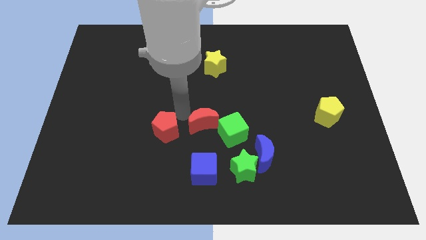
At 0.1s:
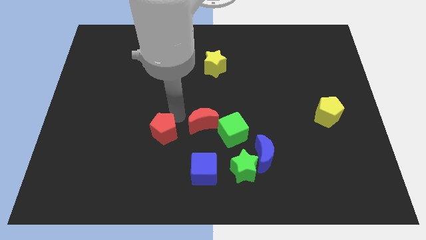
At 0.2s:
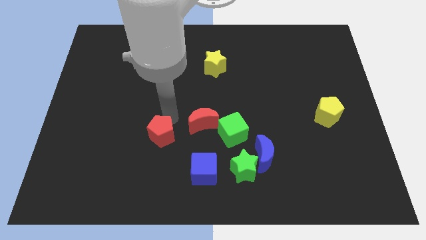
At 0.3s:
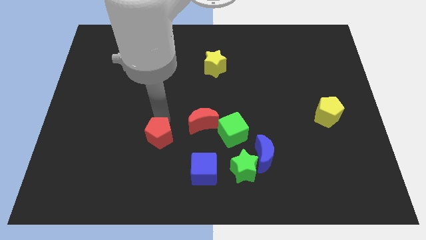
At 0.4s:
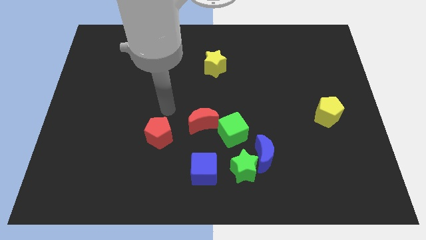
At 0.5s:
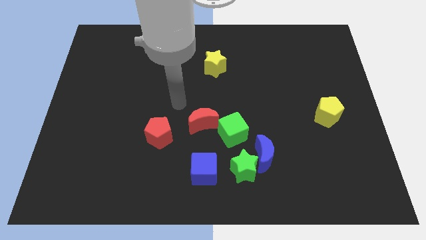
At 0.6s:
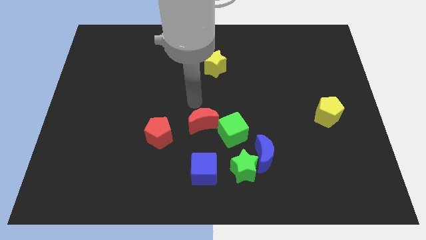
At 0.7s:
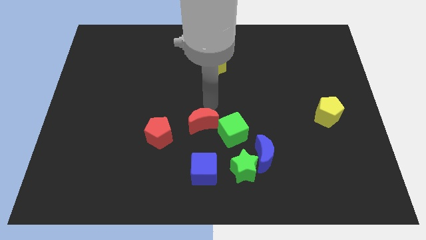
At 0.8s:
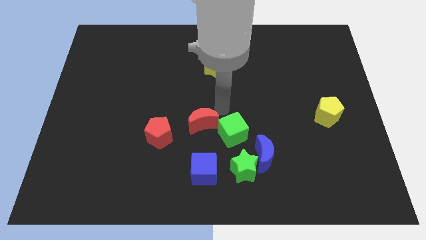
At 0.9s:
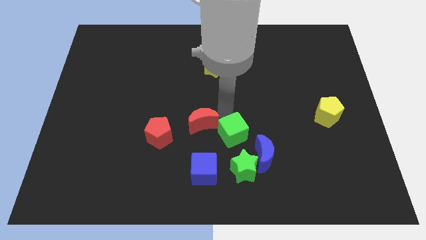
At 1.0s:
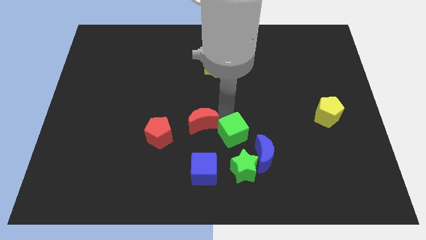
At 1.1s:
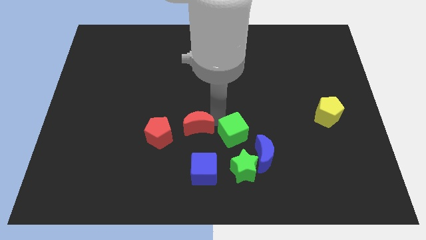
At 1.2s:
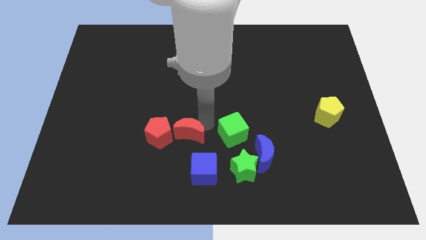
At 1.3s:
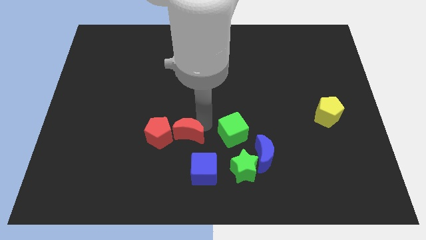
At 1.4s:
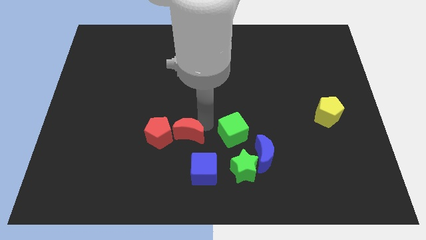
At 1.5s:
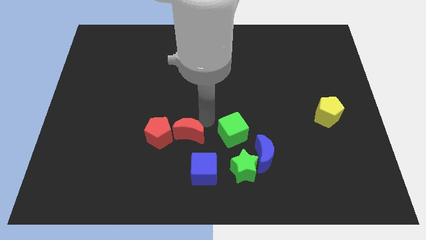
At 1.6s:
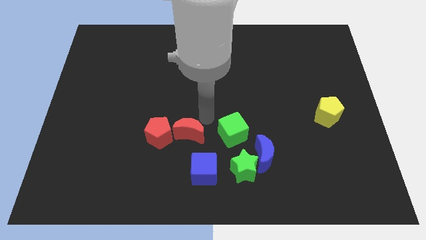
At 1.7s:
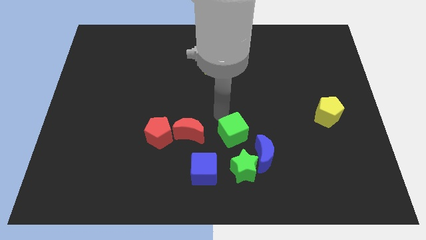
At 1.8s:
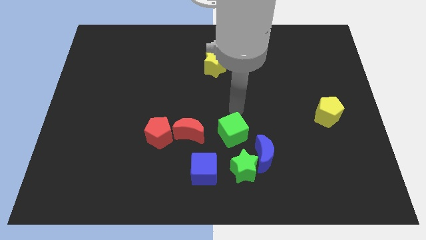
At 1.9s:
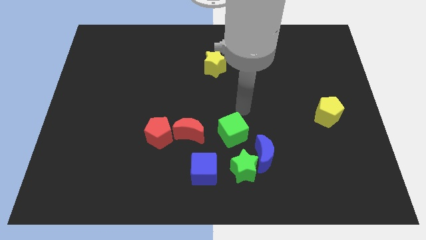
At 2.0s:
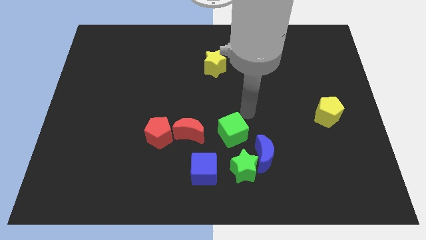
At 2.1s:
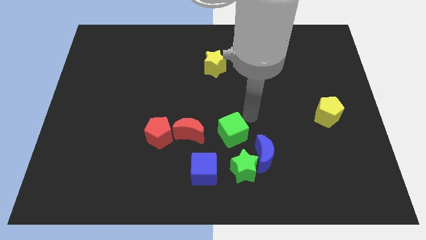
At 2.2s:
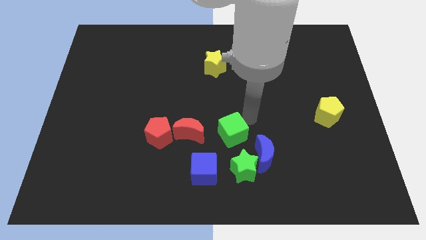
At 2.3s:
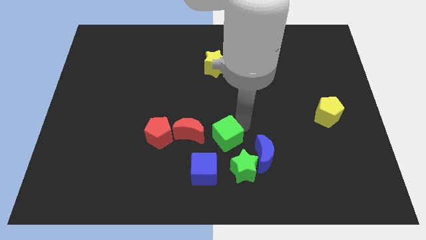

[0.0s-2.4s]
push the red pentagon and red crescent to the left of the green cube

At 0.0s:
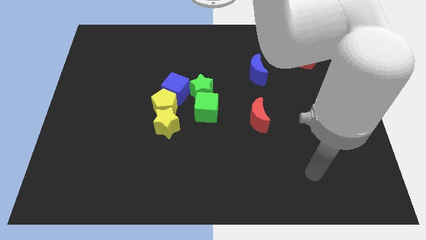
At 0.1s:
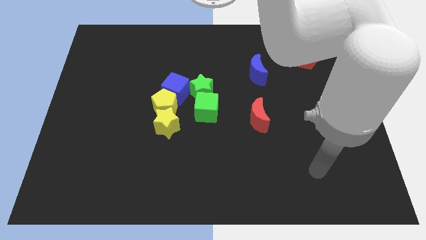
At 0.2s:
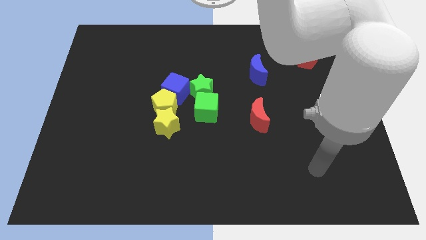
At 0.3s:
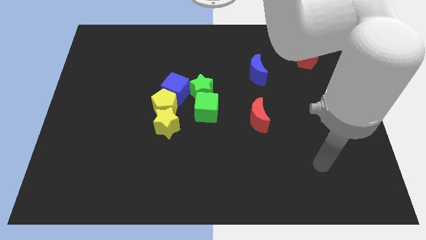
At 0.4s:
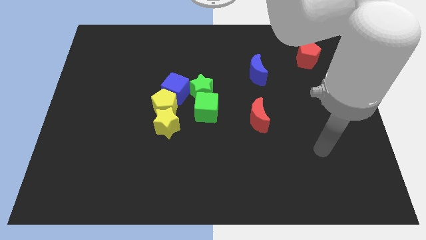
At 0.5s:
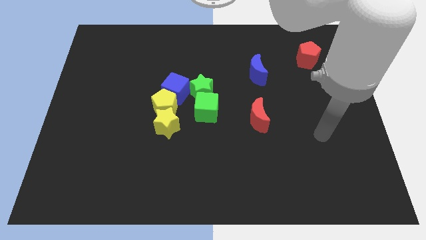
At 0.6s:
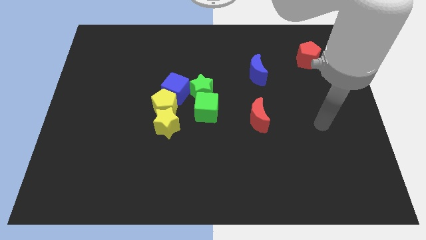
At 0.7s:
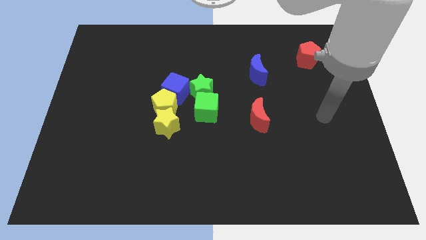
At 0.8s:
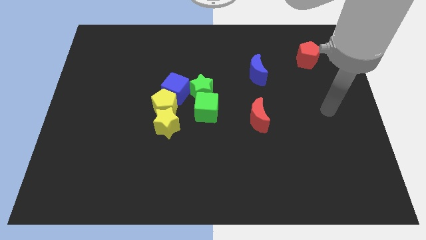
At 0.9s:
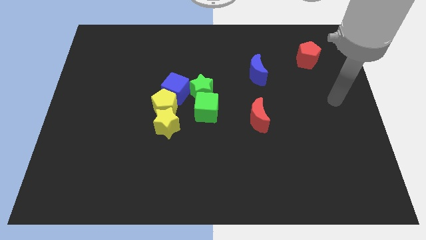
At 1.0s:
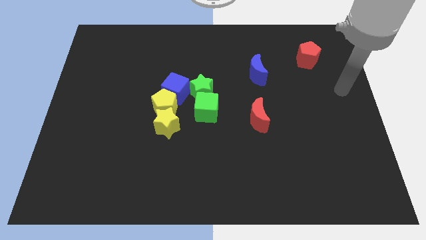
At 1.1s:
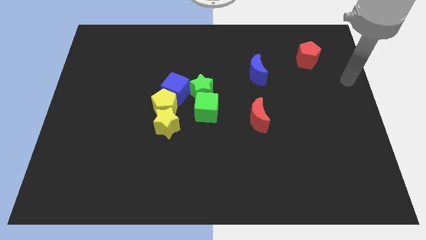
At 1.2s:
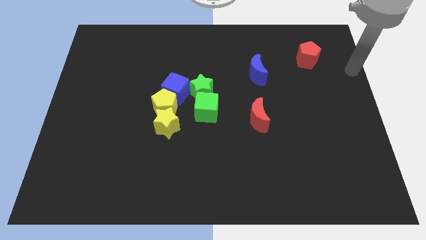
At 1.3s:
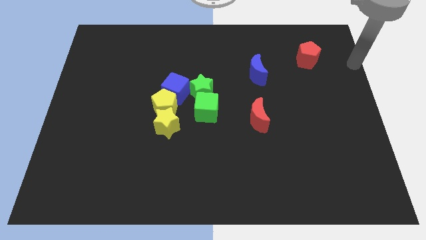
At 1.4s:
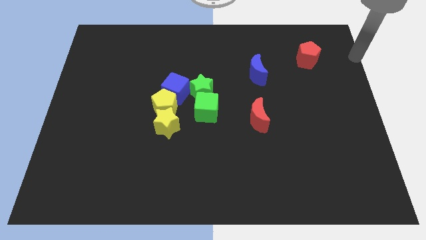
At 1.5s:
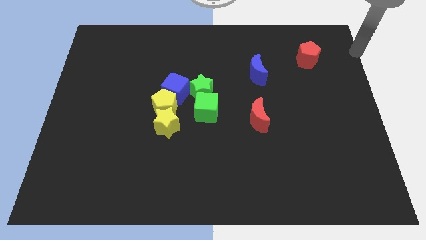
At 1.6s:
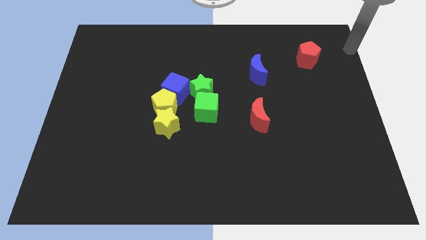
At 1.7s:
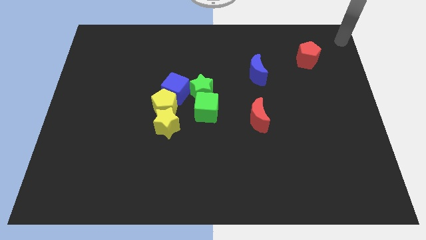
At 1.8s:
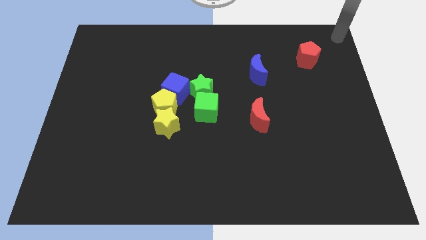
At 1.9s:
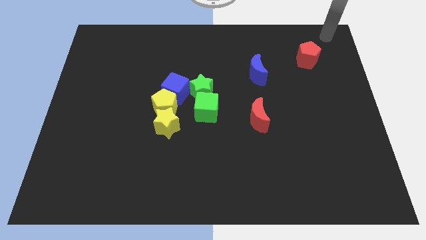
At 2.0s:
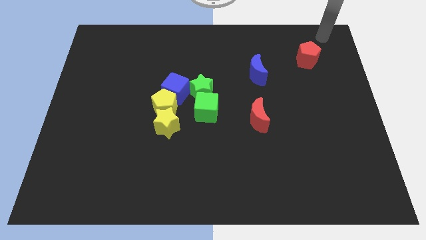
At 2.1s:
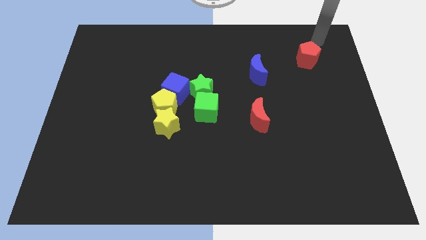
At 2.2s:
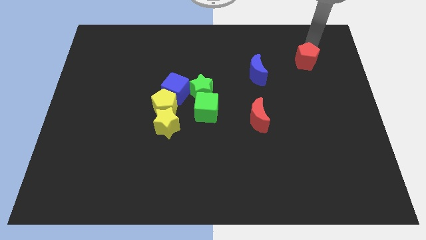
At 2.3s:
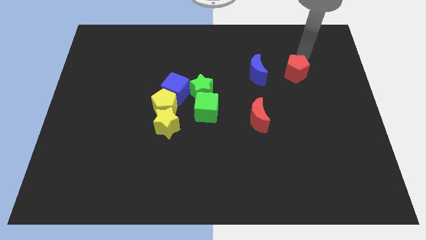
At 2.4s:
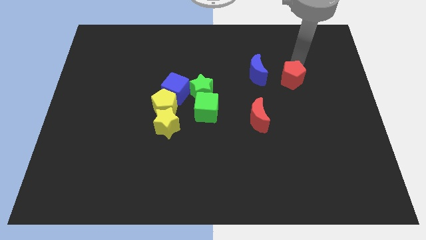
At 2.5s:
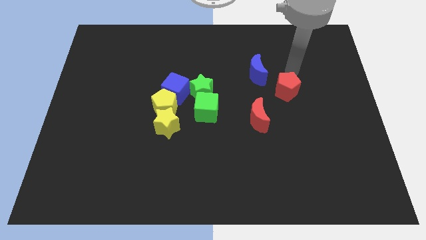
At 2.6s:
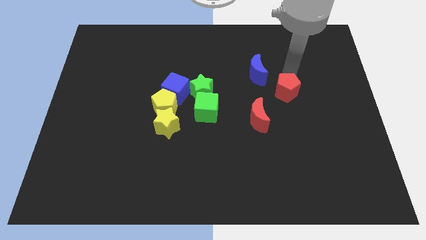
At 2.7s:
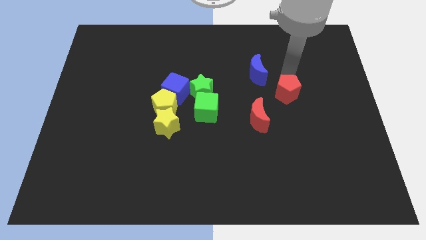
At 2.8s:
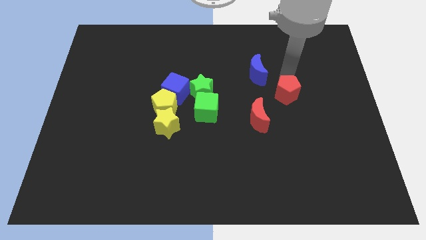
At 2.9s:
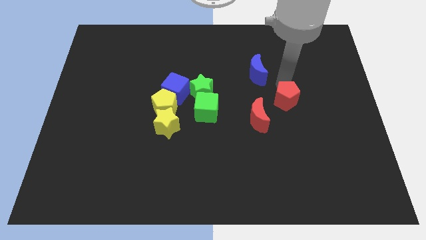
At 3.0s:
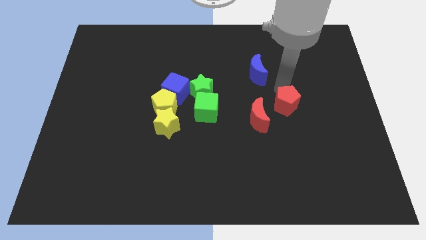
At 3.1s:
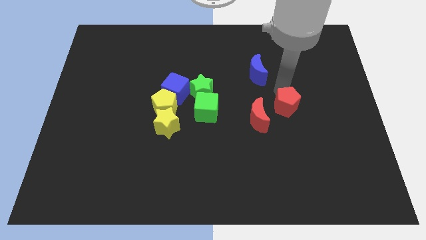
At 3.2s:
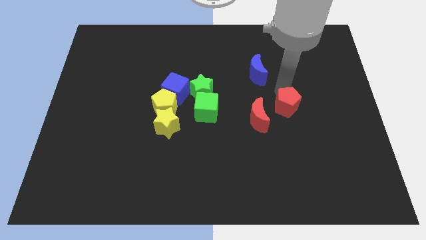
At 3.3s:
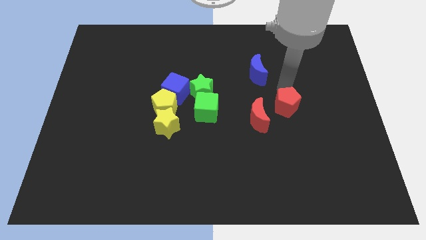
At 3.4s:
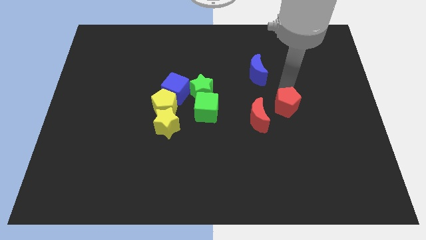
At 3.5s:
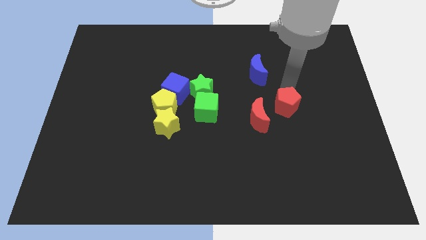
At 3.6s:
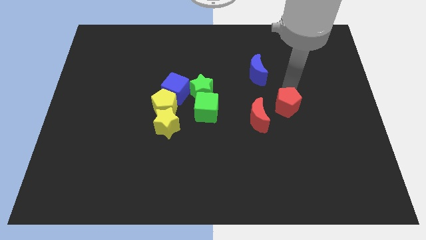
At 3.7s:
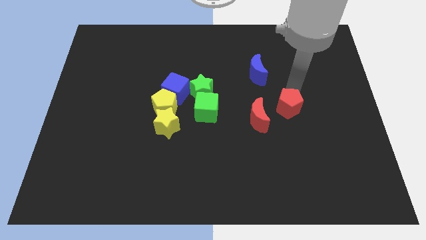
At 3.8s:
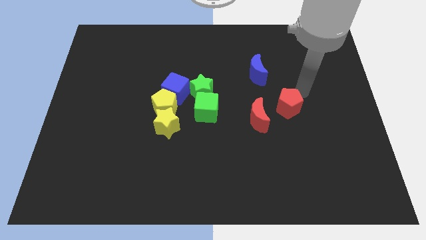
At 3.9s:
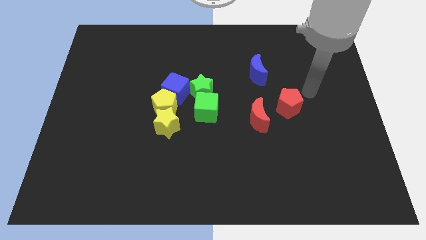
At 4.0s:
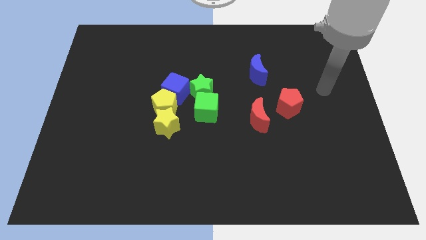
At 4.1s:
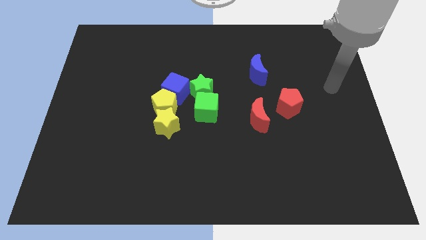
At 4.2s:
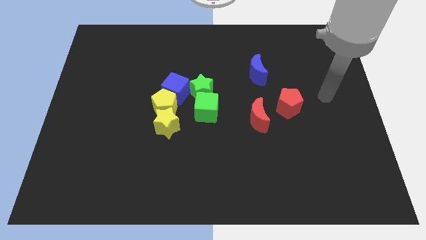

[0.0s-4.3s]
push the red pentagon to the right side of the red moon

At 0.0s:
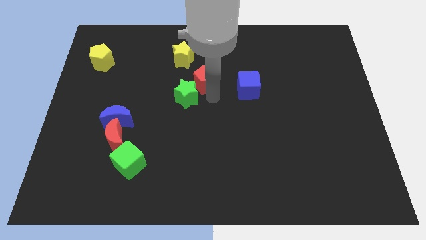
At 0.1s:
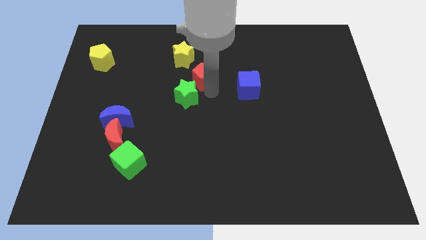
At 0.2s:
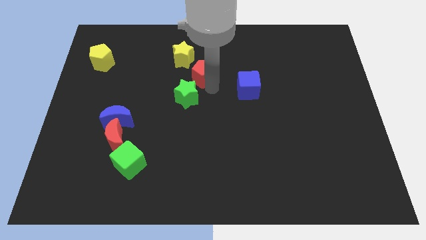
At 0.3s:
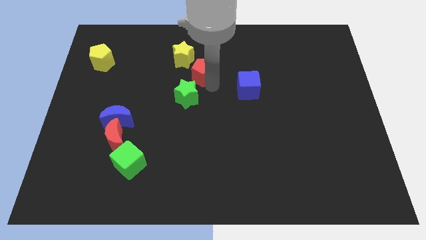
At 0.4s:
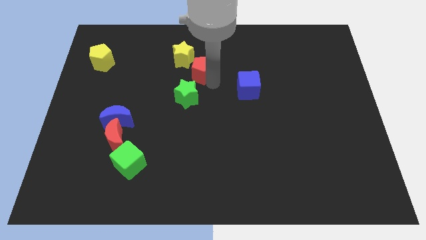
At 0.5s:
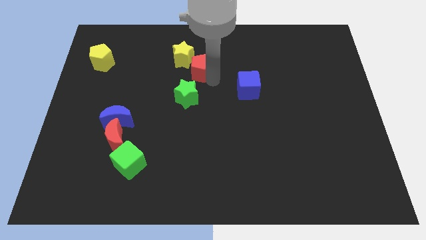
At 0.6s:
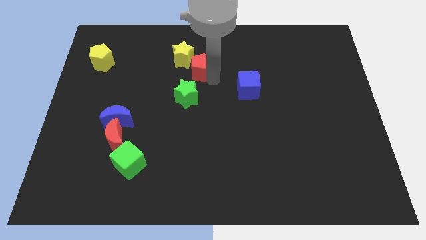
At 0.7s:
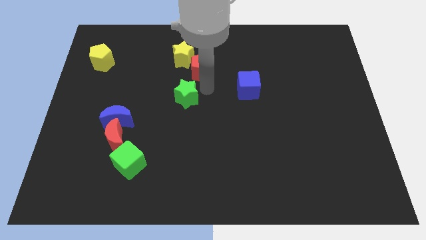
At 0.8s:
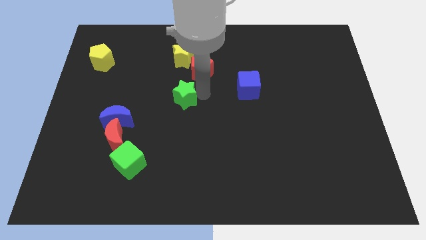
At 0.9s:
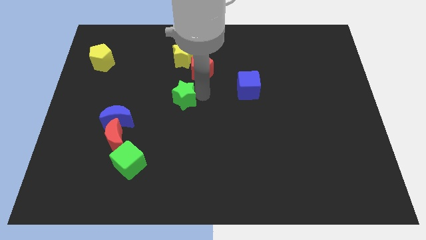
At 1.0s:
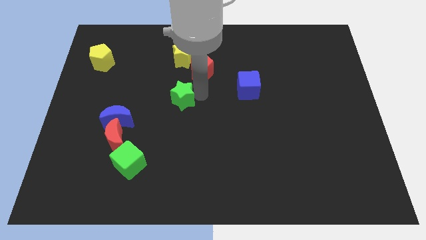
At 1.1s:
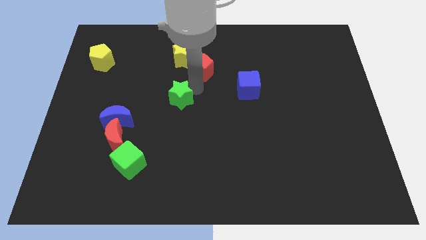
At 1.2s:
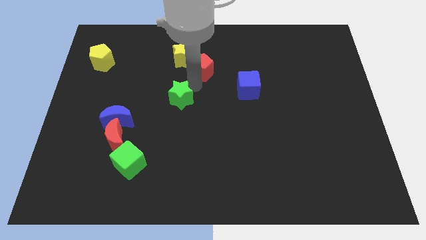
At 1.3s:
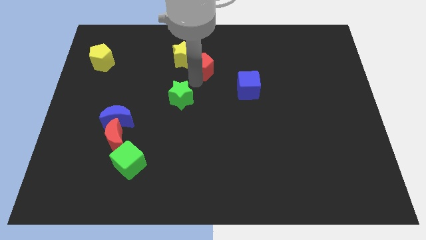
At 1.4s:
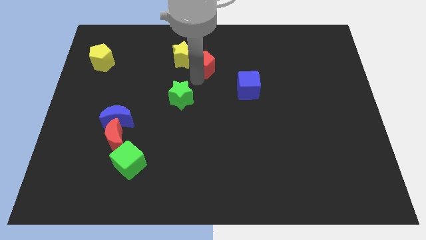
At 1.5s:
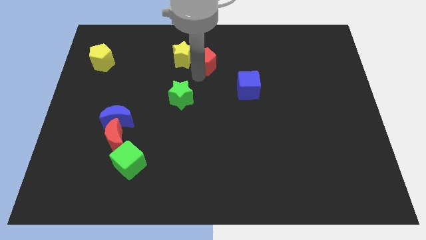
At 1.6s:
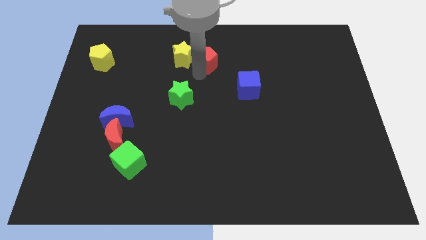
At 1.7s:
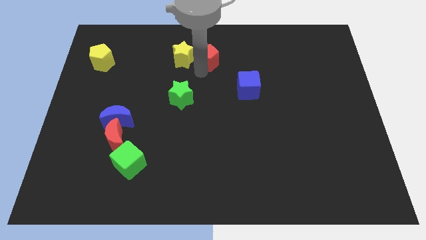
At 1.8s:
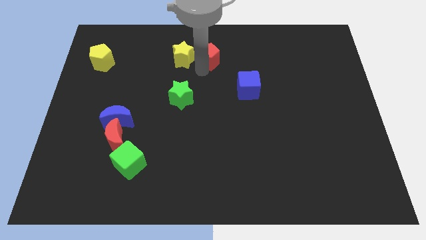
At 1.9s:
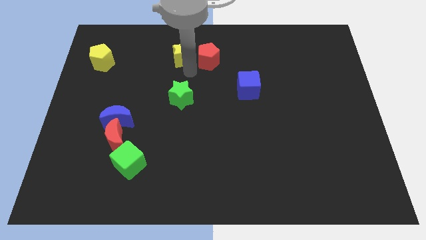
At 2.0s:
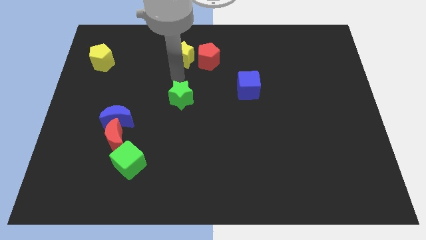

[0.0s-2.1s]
move the red pentagon beside the yellow star
